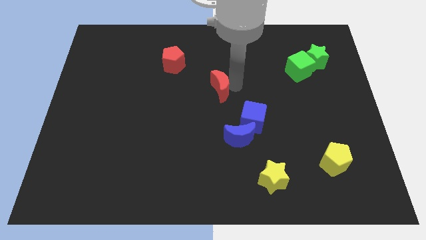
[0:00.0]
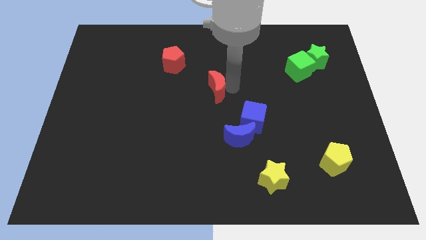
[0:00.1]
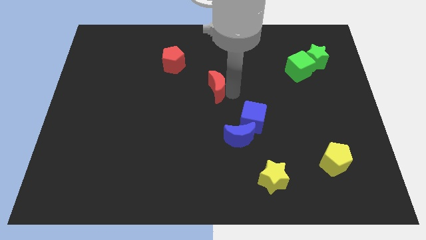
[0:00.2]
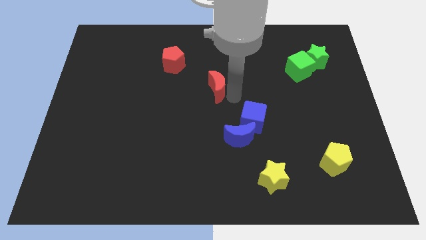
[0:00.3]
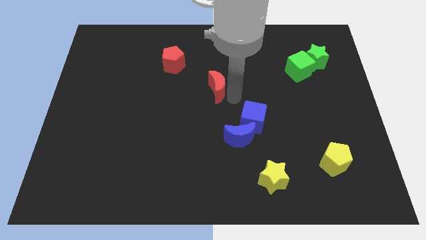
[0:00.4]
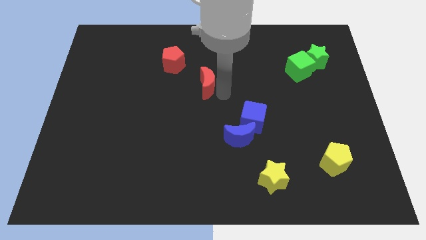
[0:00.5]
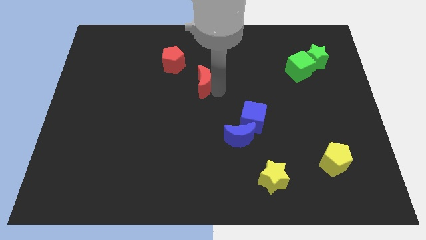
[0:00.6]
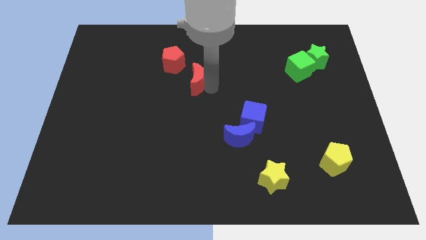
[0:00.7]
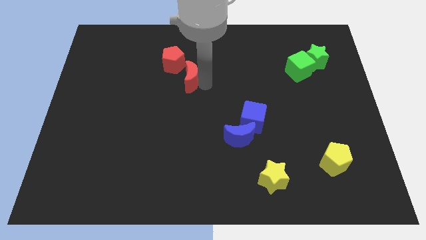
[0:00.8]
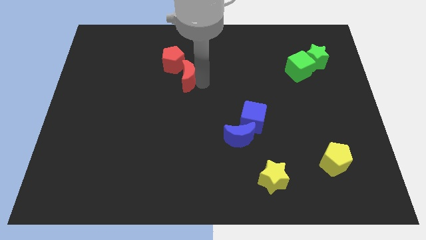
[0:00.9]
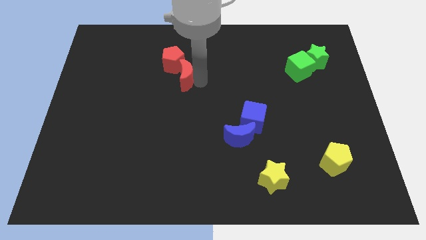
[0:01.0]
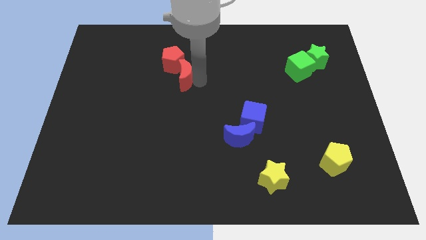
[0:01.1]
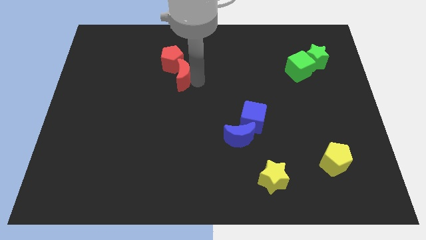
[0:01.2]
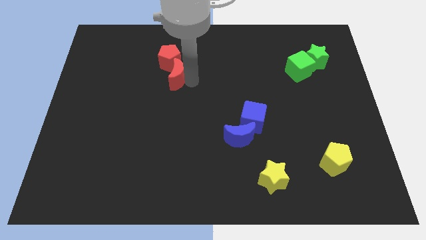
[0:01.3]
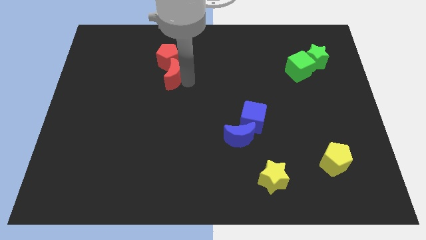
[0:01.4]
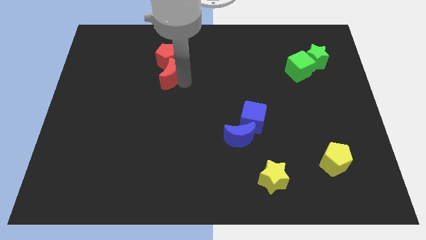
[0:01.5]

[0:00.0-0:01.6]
move the red moon into the red pentagon

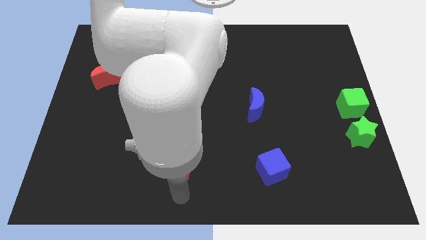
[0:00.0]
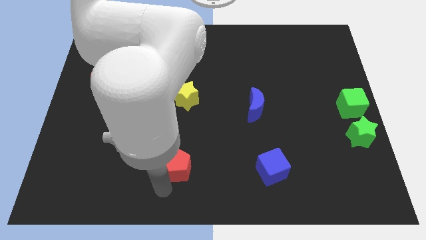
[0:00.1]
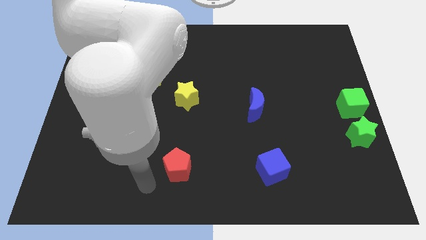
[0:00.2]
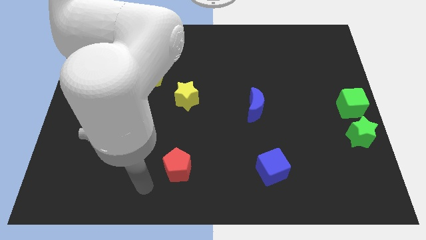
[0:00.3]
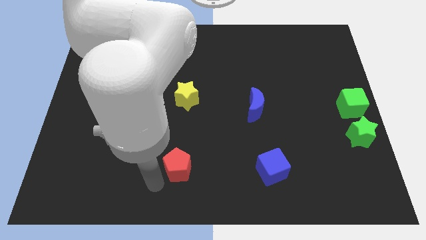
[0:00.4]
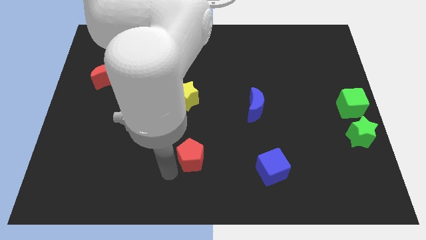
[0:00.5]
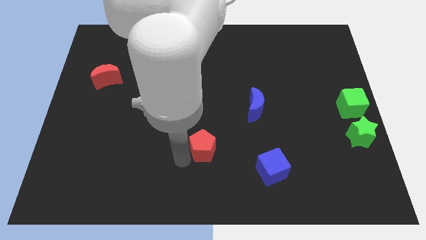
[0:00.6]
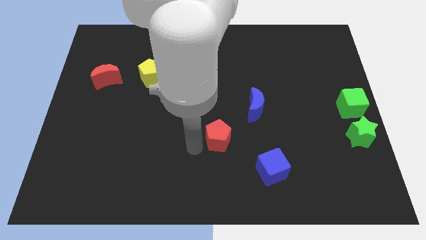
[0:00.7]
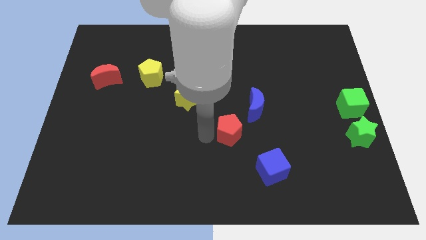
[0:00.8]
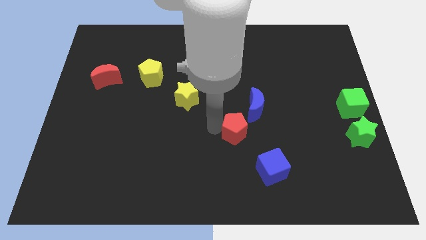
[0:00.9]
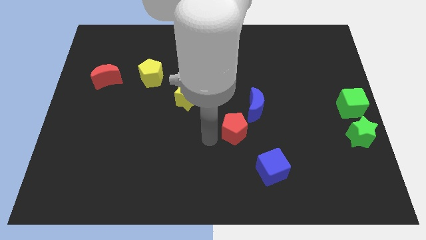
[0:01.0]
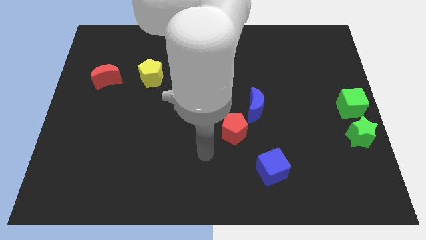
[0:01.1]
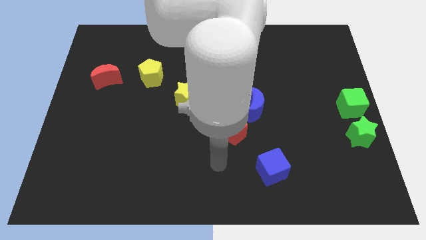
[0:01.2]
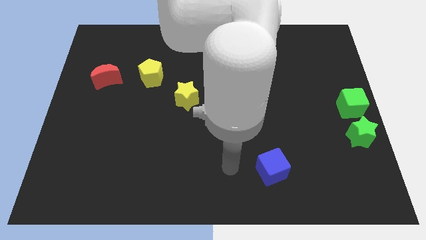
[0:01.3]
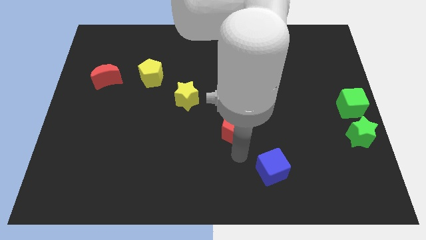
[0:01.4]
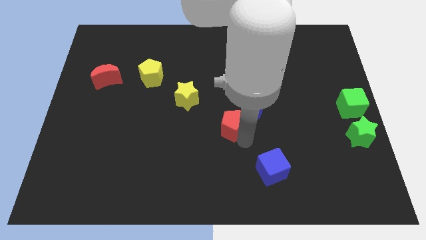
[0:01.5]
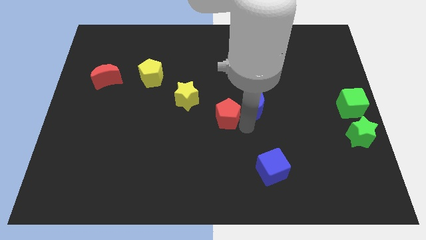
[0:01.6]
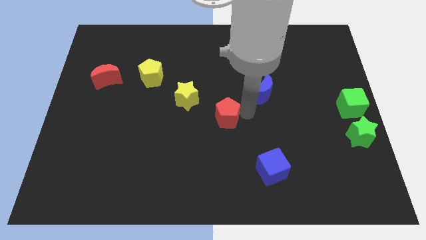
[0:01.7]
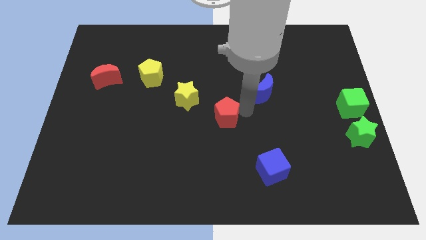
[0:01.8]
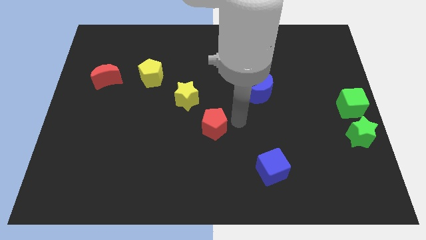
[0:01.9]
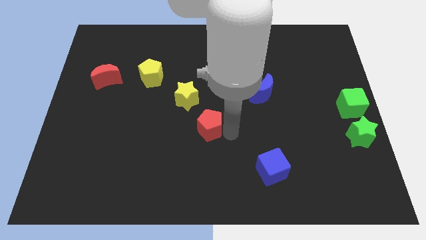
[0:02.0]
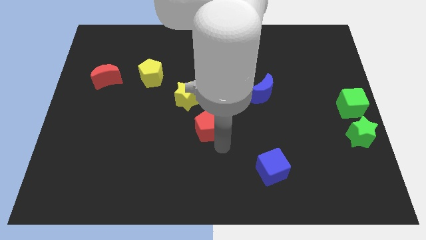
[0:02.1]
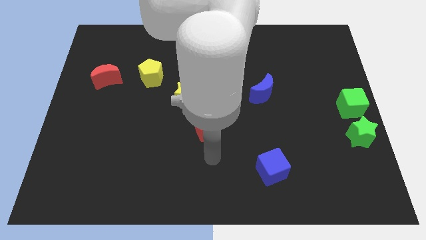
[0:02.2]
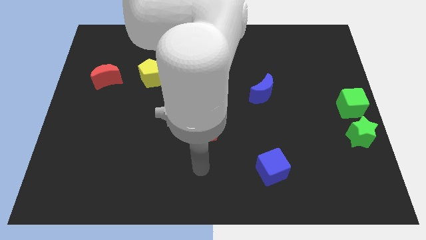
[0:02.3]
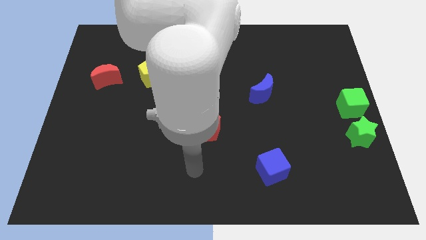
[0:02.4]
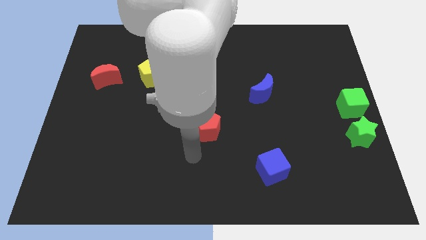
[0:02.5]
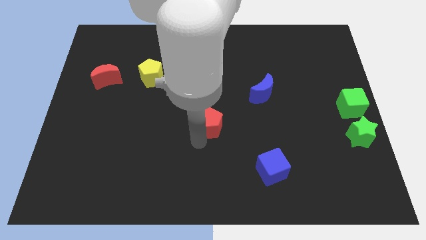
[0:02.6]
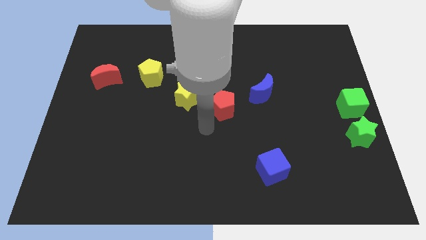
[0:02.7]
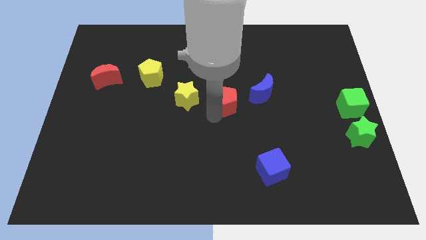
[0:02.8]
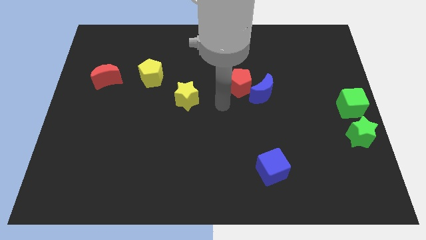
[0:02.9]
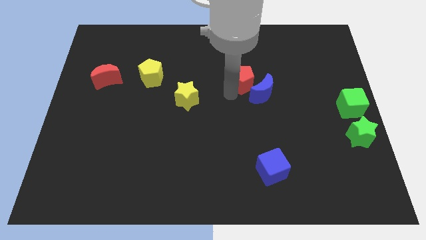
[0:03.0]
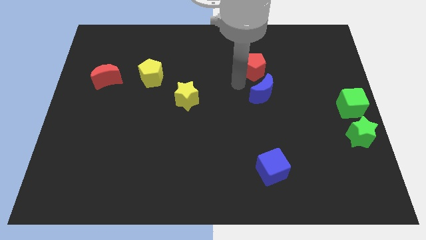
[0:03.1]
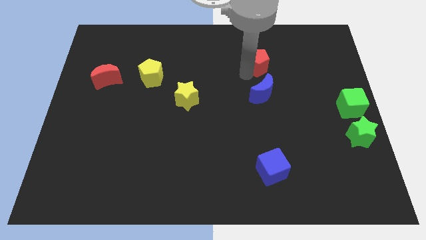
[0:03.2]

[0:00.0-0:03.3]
move red pentagon above blue crescent

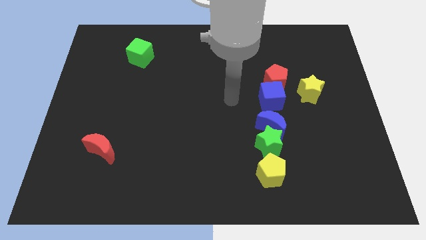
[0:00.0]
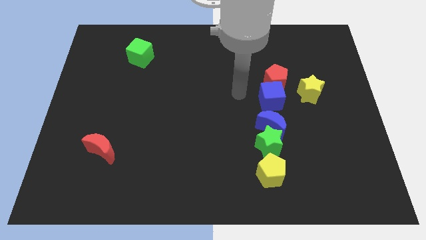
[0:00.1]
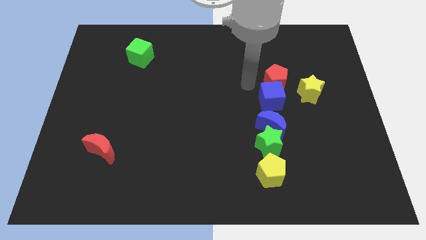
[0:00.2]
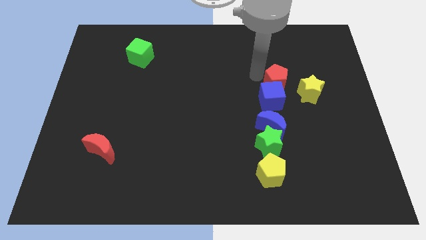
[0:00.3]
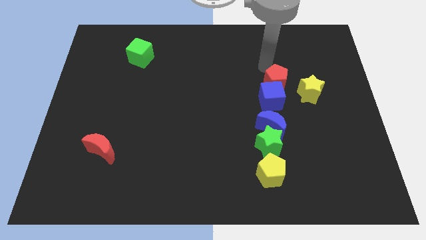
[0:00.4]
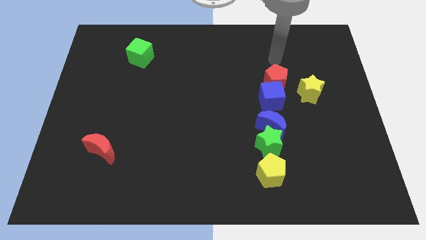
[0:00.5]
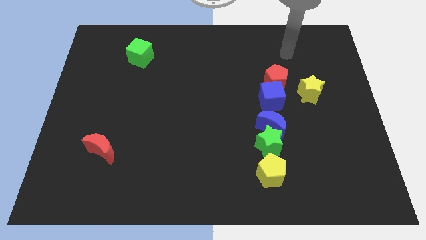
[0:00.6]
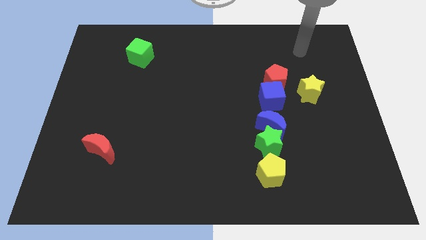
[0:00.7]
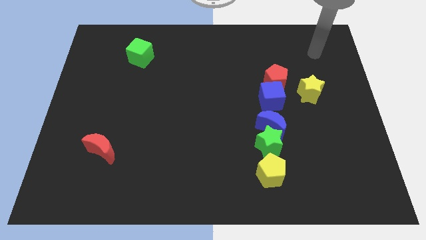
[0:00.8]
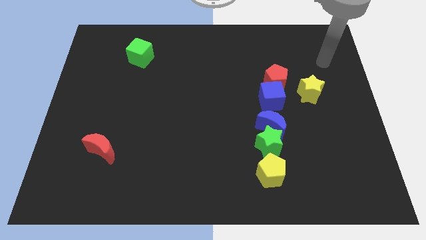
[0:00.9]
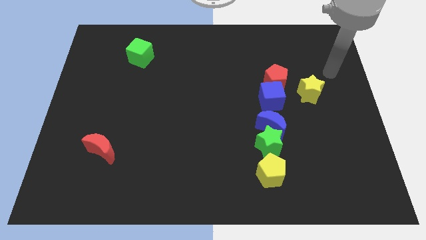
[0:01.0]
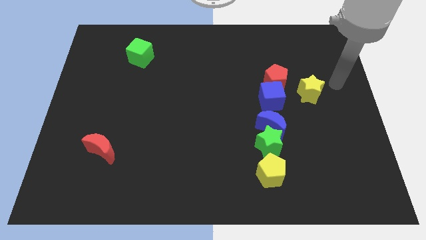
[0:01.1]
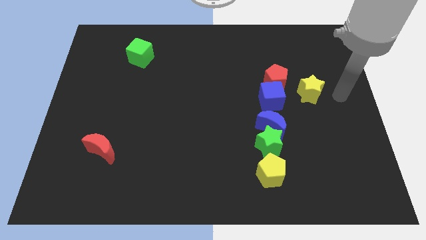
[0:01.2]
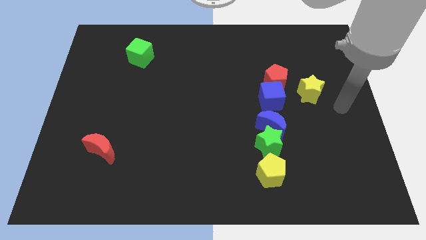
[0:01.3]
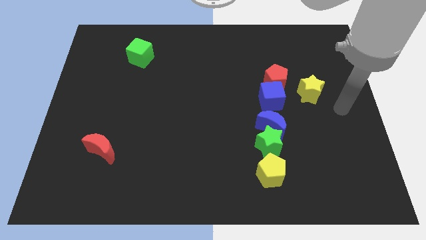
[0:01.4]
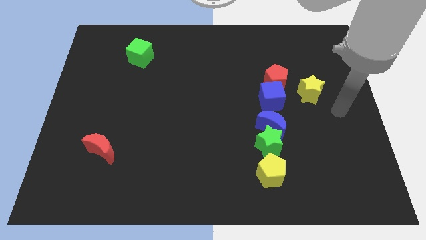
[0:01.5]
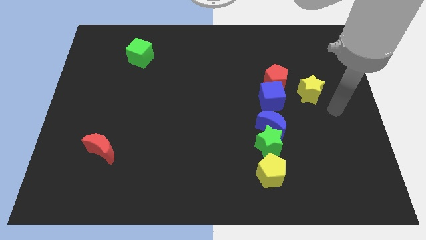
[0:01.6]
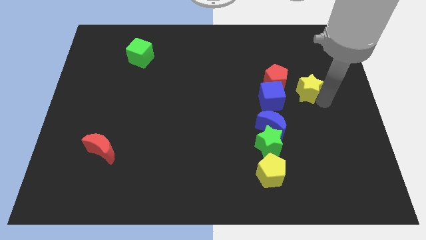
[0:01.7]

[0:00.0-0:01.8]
move arm near yellow star

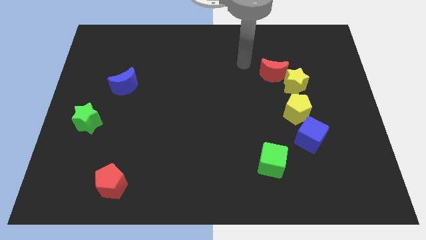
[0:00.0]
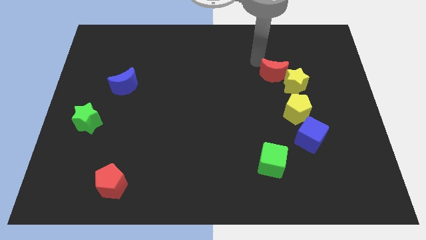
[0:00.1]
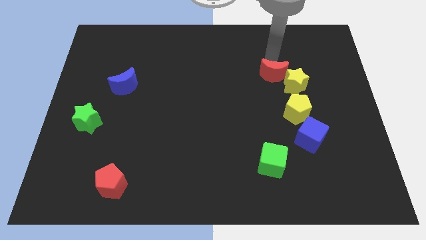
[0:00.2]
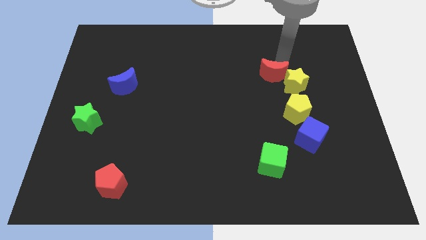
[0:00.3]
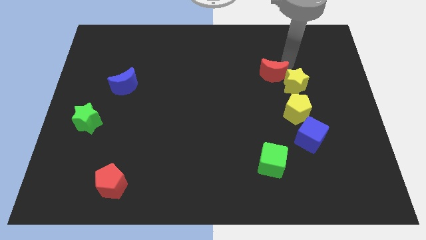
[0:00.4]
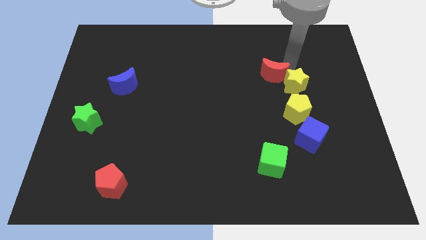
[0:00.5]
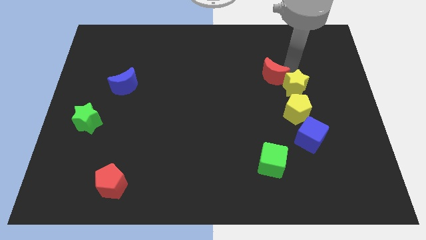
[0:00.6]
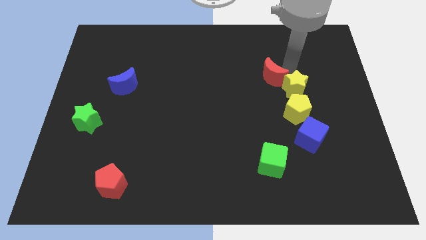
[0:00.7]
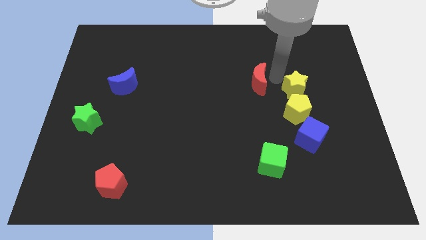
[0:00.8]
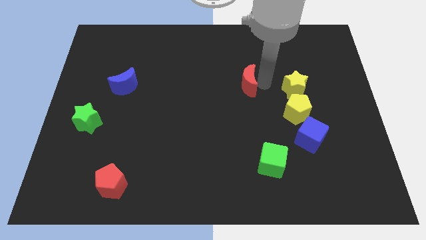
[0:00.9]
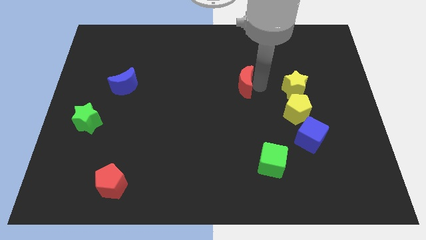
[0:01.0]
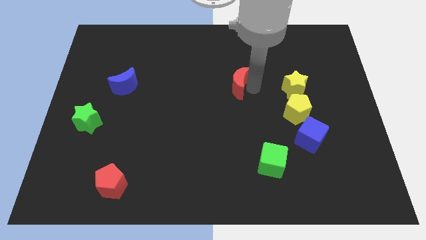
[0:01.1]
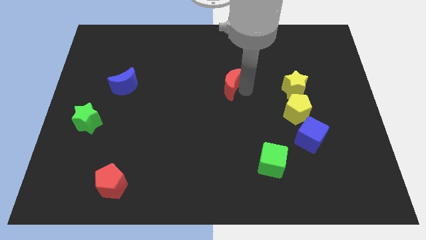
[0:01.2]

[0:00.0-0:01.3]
separate the red crescent from yellow star

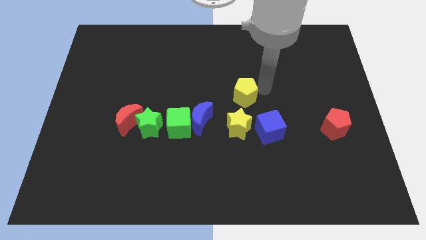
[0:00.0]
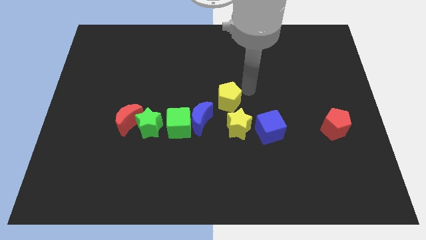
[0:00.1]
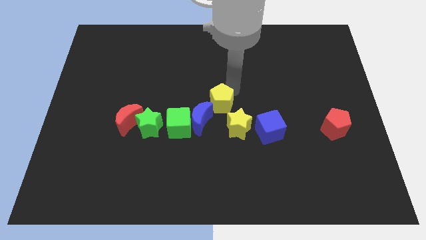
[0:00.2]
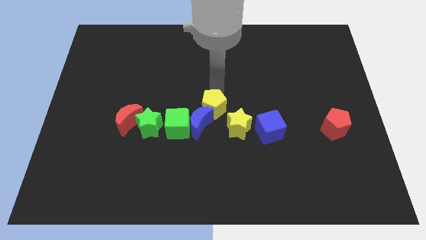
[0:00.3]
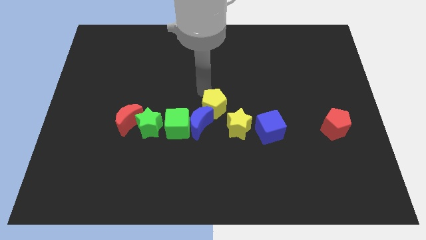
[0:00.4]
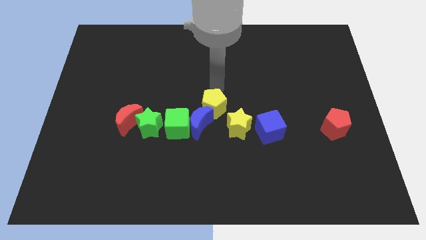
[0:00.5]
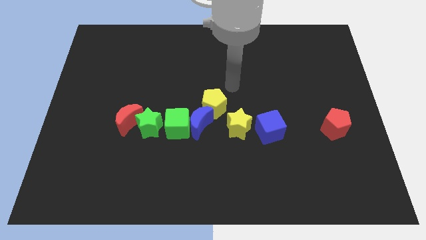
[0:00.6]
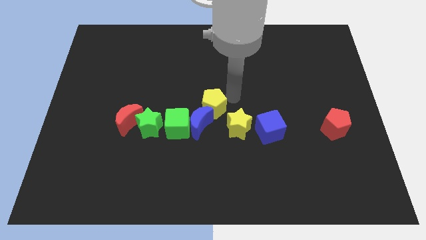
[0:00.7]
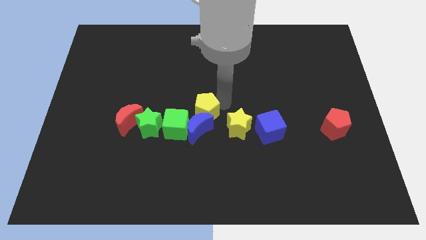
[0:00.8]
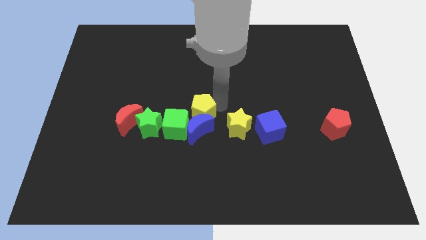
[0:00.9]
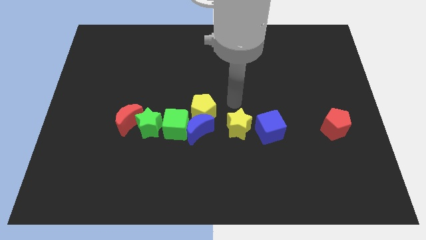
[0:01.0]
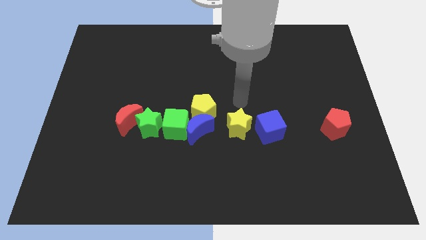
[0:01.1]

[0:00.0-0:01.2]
push the yellow pentagon to the top of the blue crescent
